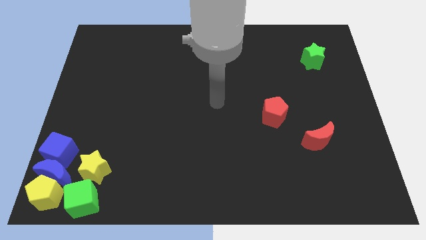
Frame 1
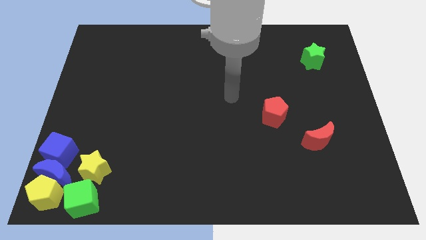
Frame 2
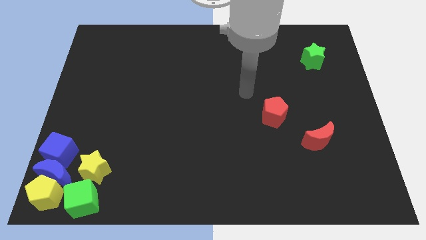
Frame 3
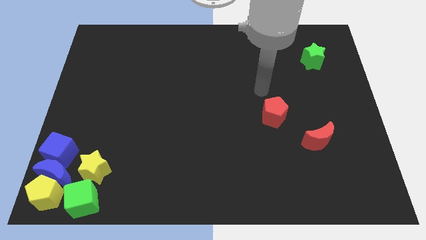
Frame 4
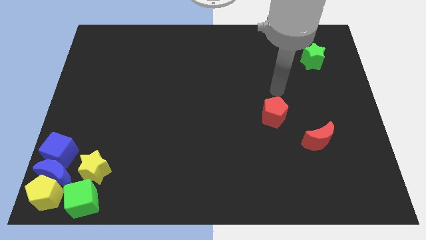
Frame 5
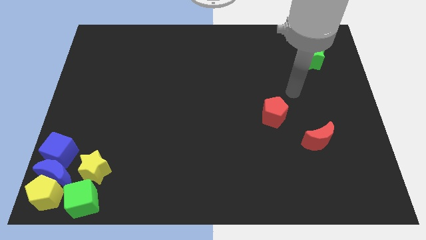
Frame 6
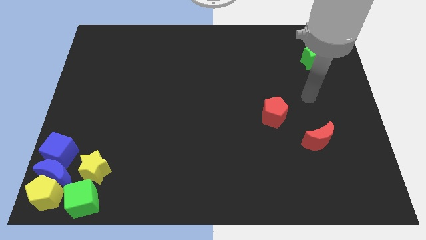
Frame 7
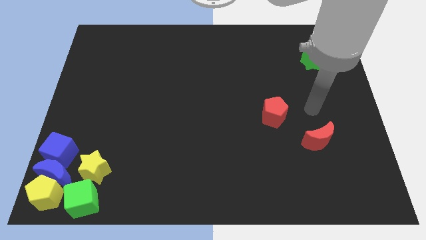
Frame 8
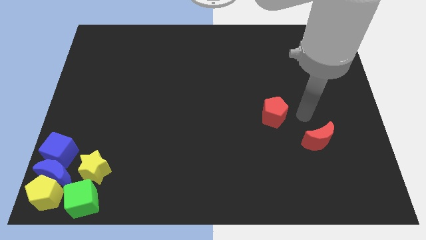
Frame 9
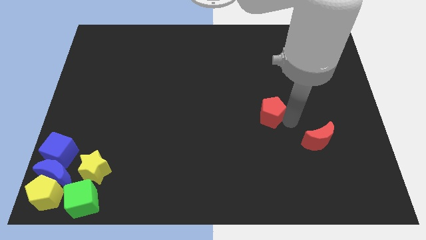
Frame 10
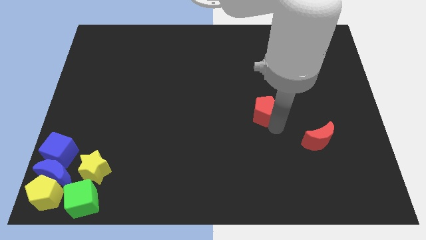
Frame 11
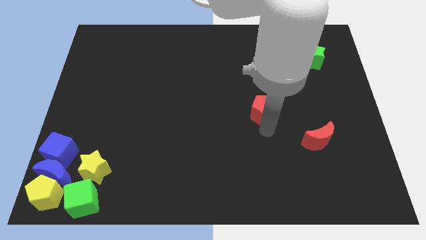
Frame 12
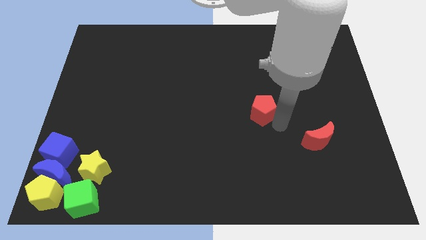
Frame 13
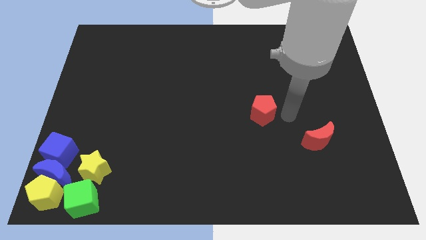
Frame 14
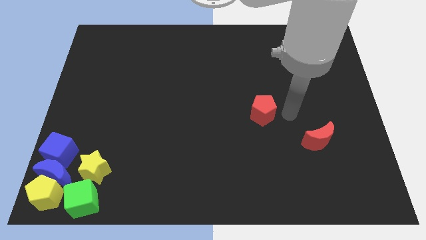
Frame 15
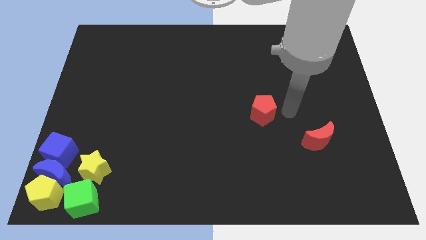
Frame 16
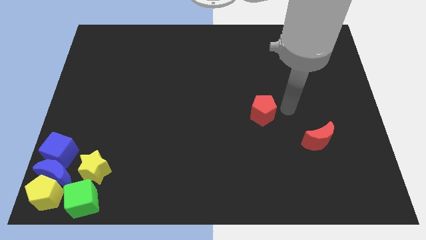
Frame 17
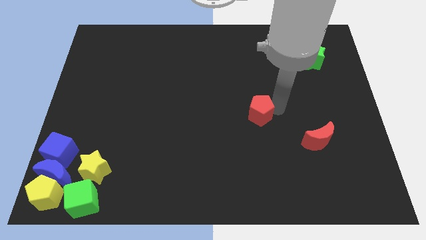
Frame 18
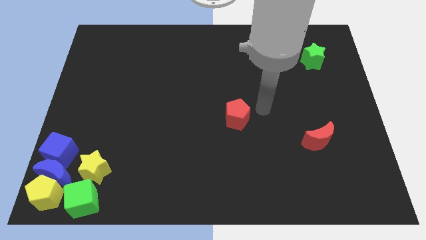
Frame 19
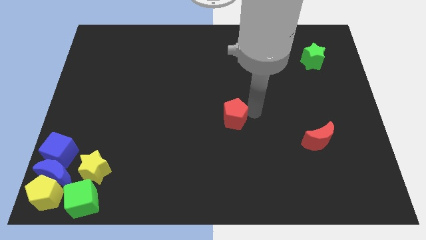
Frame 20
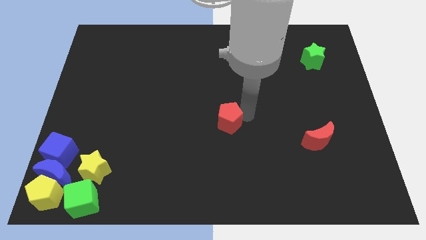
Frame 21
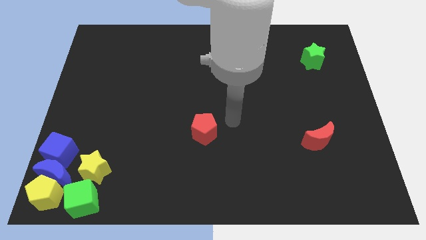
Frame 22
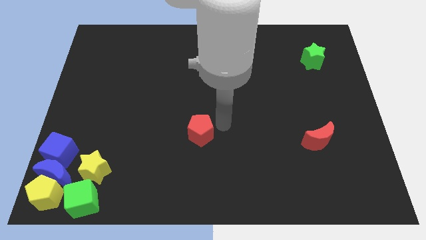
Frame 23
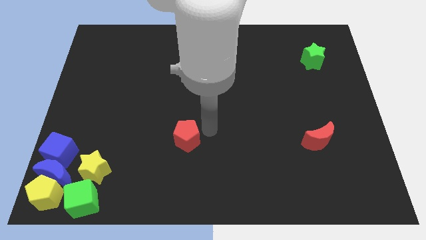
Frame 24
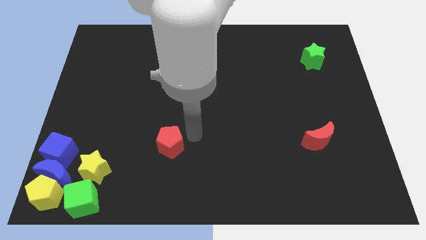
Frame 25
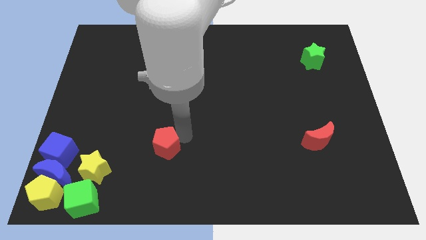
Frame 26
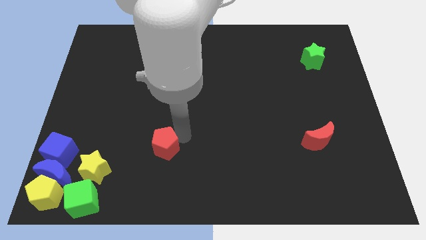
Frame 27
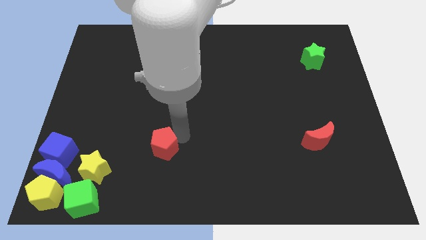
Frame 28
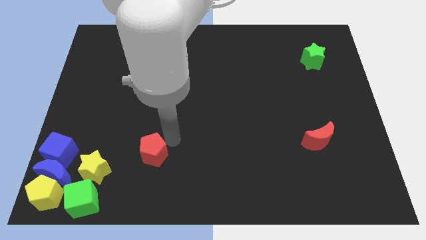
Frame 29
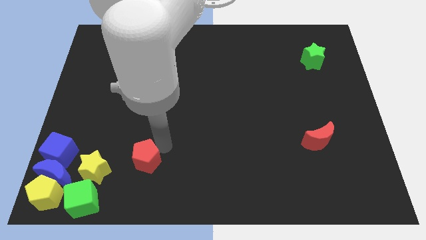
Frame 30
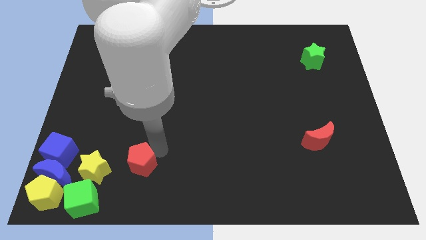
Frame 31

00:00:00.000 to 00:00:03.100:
move red pentagon to the right of yellow star

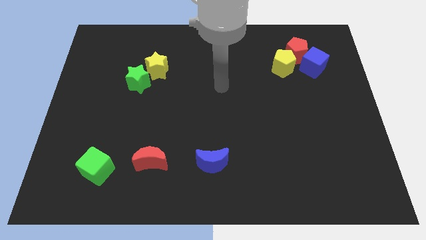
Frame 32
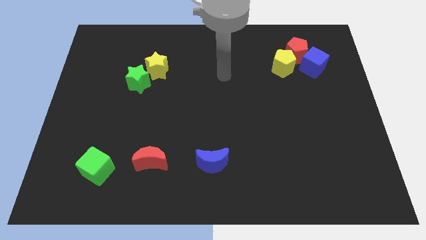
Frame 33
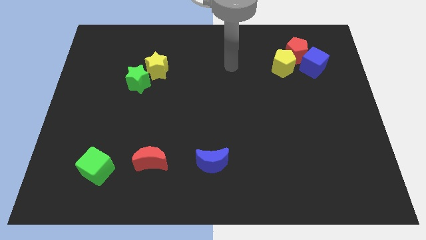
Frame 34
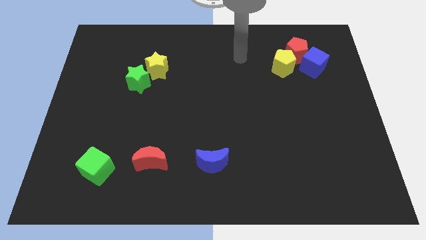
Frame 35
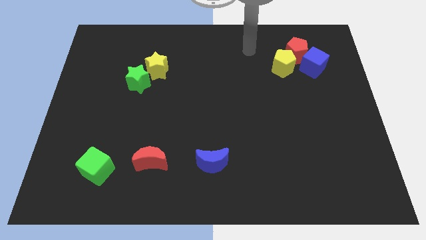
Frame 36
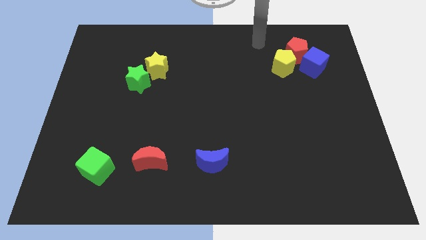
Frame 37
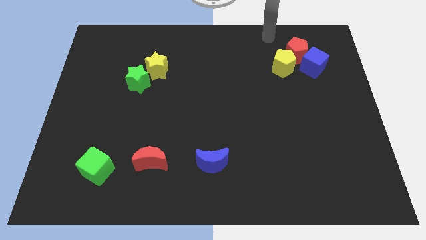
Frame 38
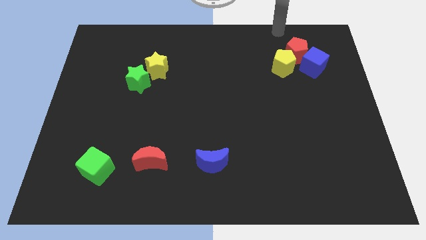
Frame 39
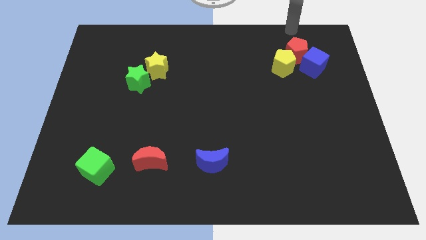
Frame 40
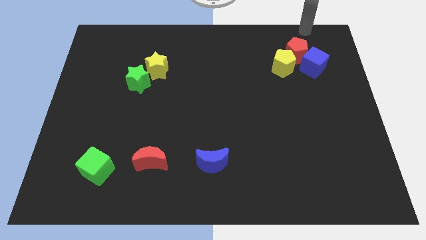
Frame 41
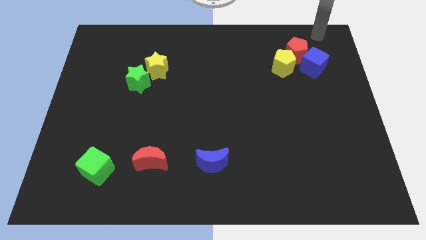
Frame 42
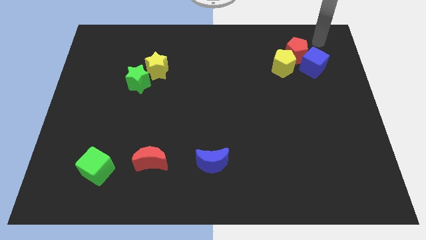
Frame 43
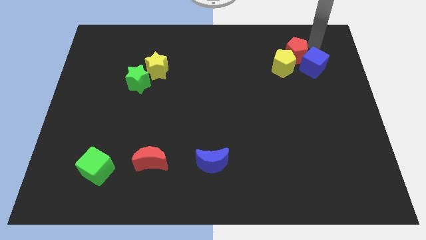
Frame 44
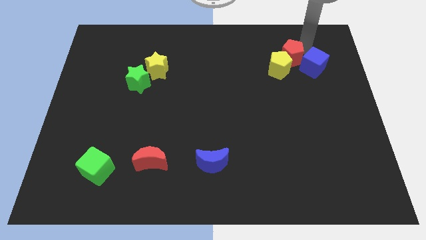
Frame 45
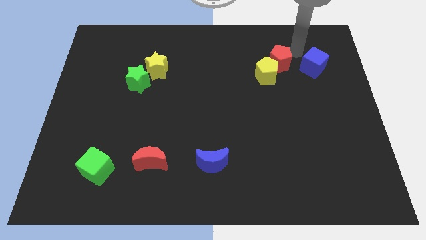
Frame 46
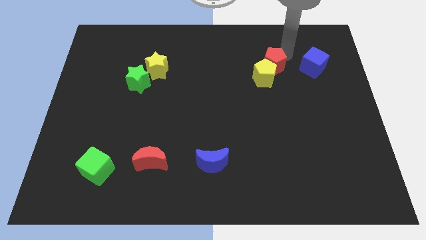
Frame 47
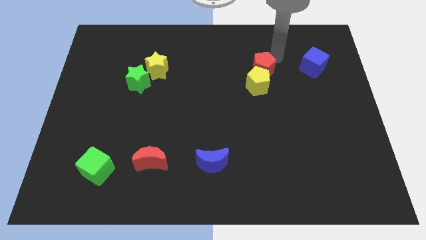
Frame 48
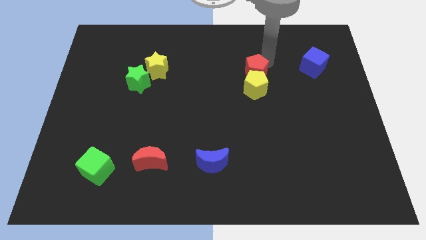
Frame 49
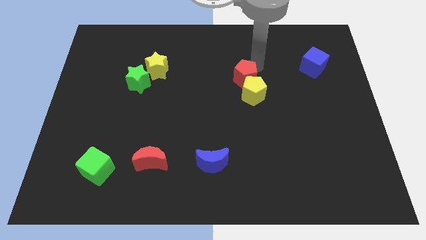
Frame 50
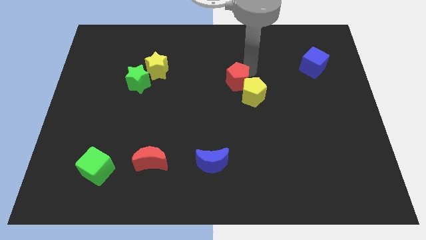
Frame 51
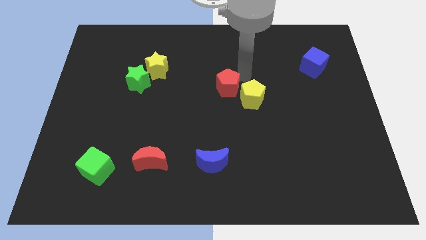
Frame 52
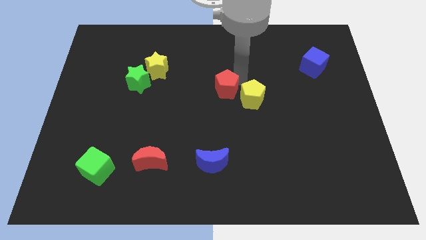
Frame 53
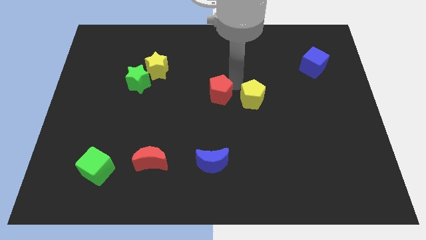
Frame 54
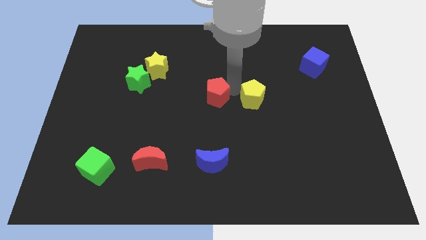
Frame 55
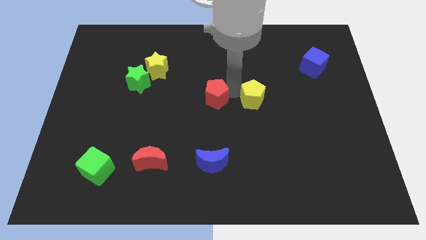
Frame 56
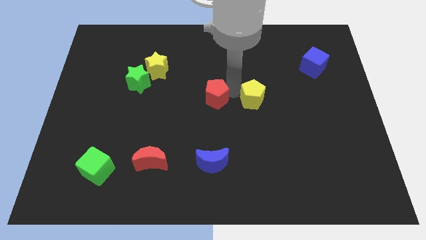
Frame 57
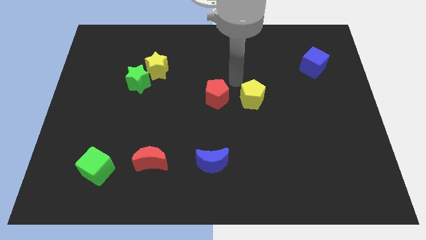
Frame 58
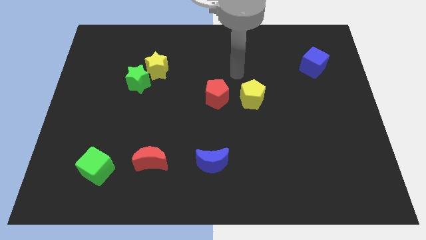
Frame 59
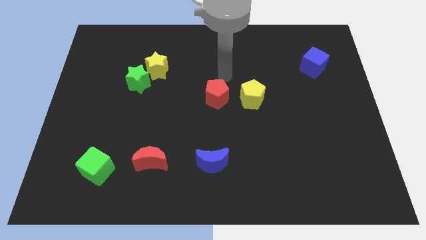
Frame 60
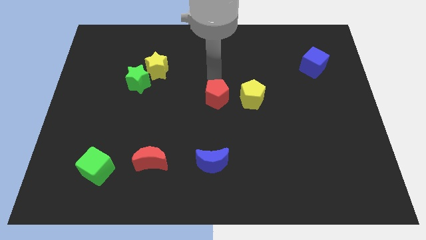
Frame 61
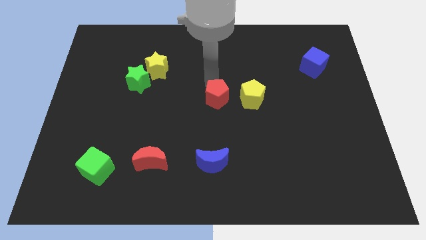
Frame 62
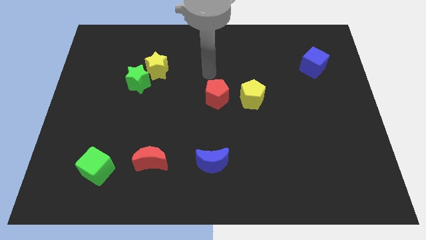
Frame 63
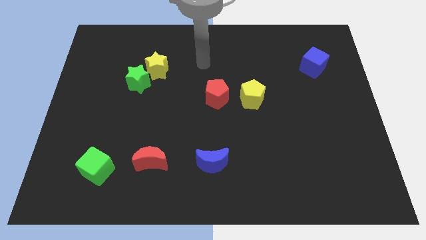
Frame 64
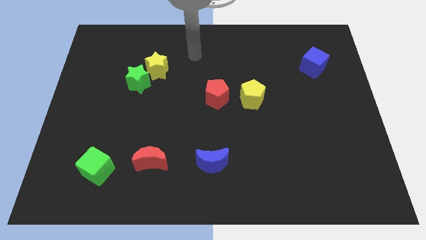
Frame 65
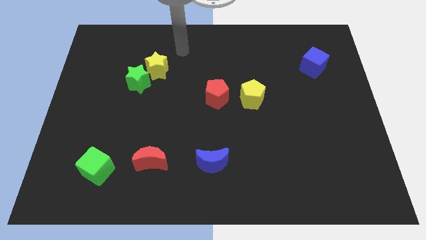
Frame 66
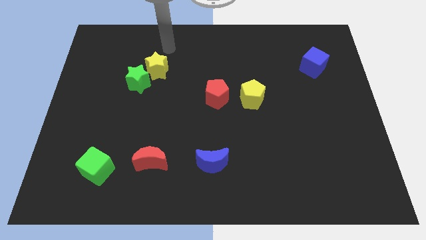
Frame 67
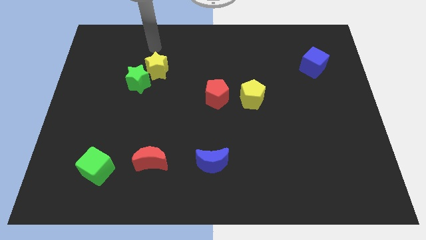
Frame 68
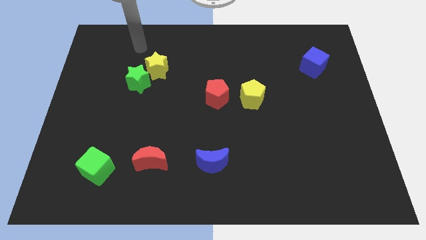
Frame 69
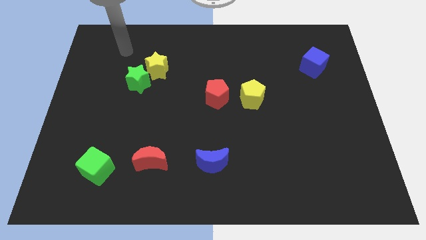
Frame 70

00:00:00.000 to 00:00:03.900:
place the red pentagon above the blue moon

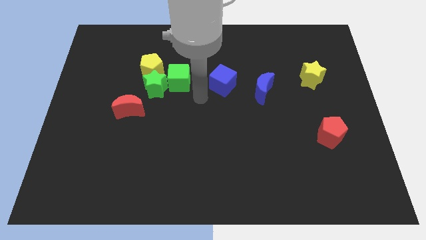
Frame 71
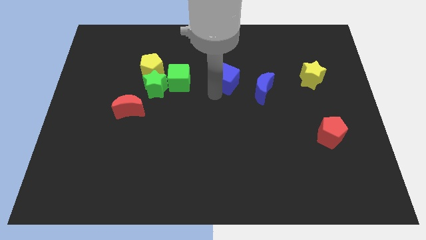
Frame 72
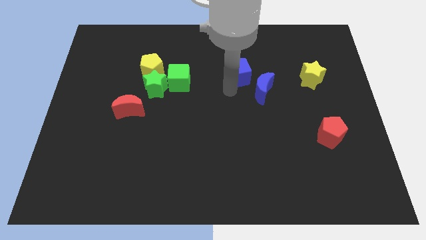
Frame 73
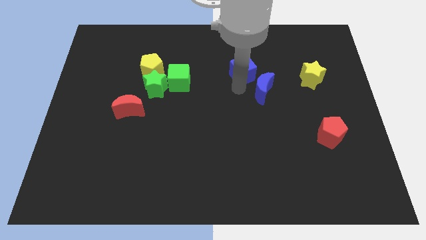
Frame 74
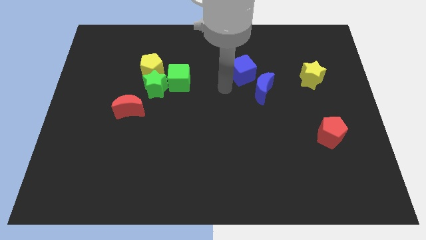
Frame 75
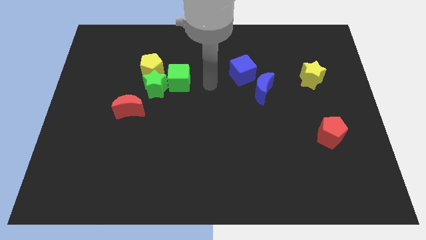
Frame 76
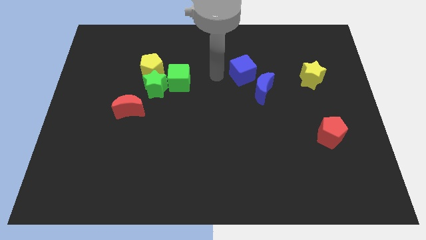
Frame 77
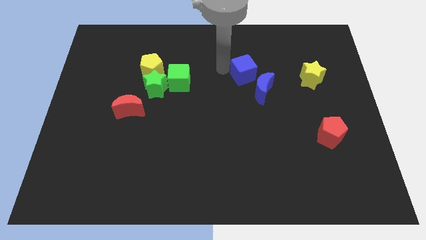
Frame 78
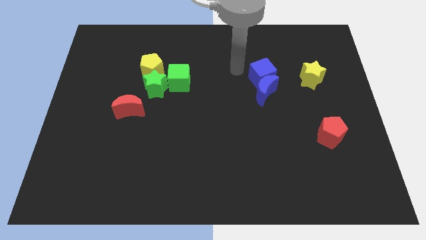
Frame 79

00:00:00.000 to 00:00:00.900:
push the blue crescent with blue cube

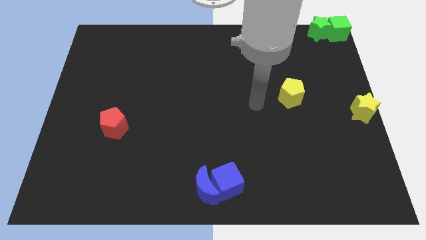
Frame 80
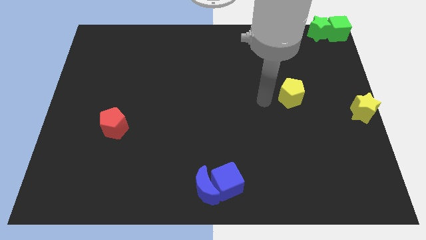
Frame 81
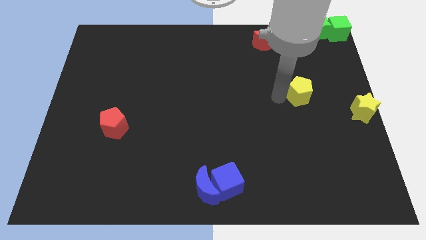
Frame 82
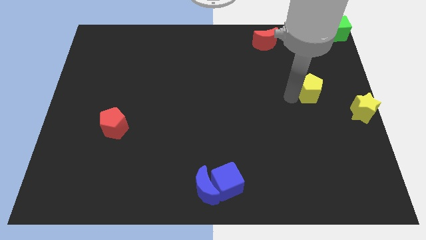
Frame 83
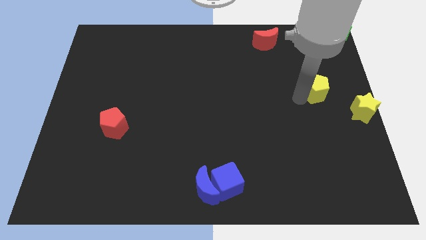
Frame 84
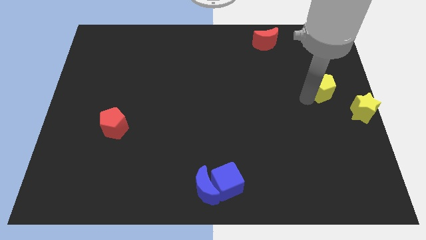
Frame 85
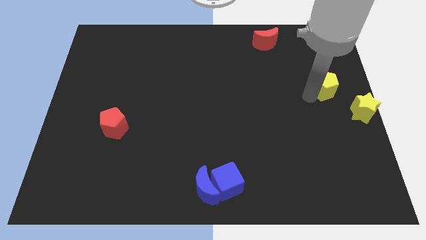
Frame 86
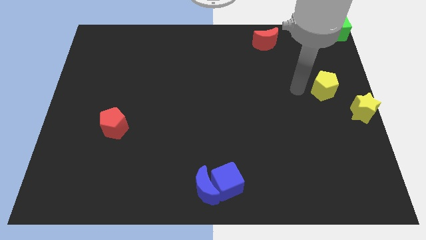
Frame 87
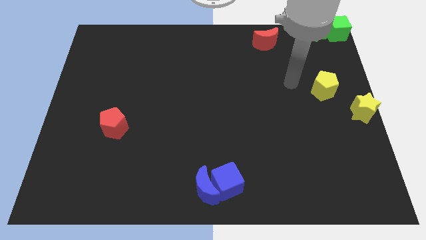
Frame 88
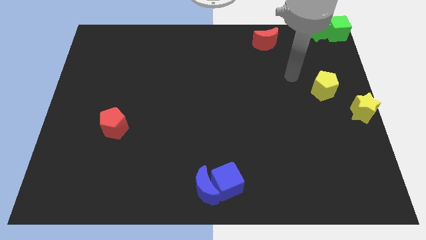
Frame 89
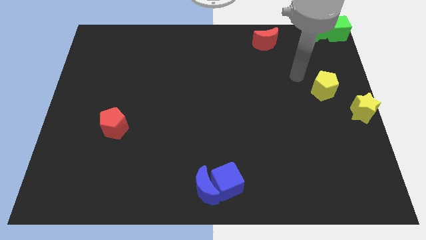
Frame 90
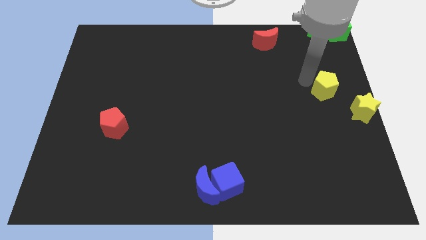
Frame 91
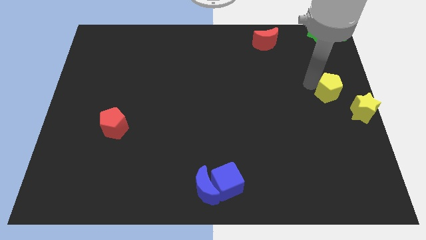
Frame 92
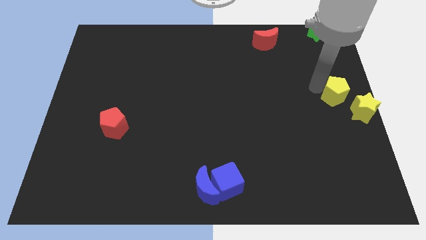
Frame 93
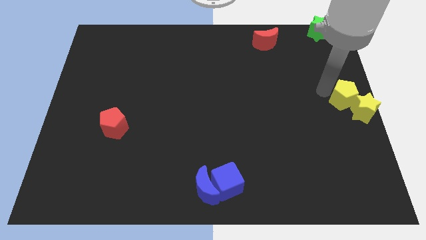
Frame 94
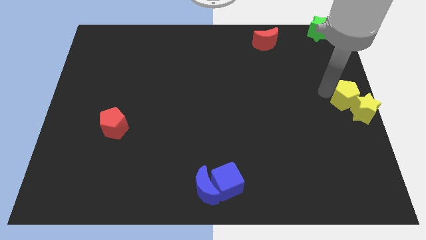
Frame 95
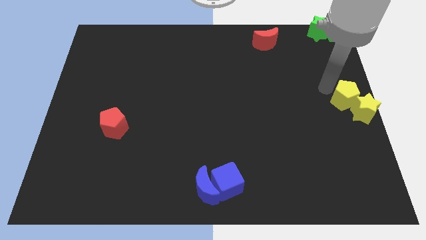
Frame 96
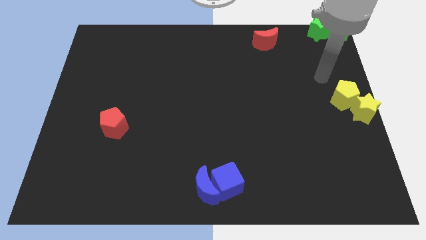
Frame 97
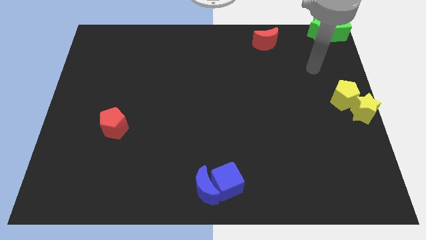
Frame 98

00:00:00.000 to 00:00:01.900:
move the yellow pentagon upward to yellow star
